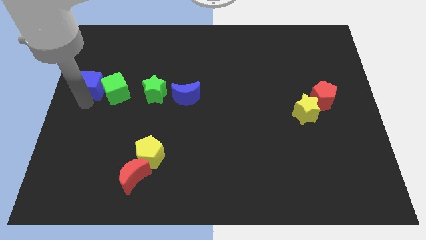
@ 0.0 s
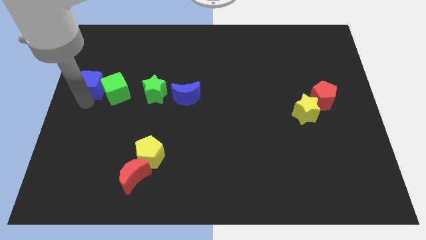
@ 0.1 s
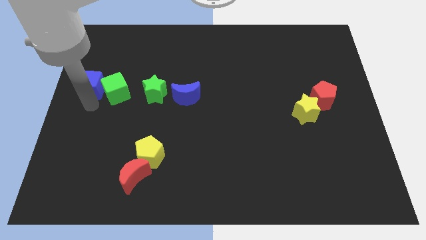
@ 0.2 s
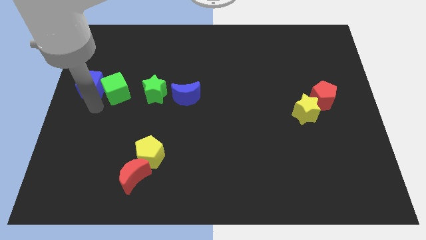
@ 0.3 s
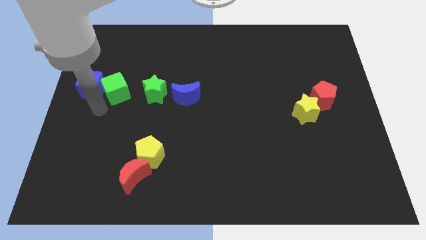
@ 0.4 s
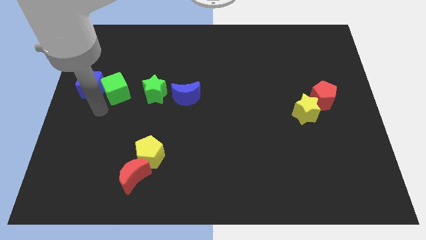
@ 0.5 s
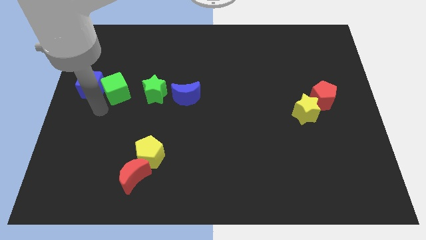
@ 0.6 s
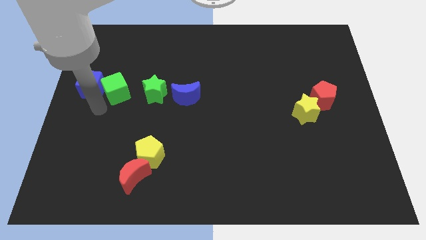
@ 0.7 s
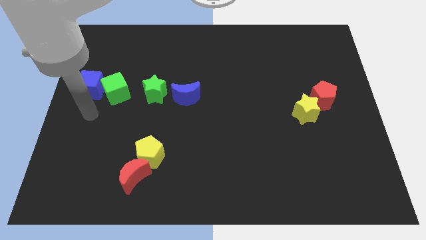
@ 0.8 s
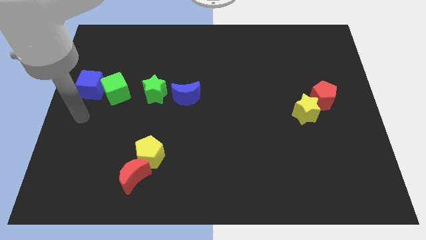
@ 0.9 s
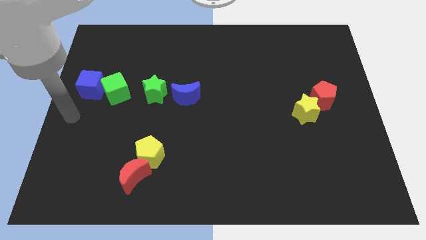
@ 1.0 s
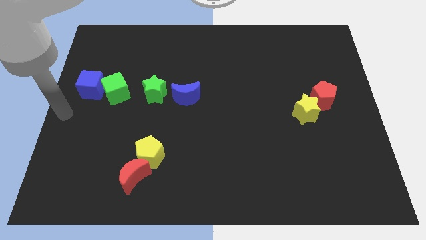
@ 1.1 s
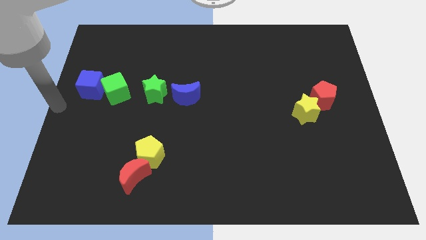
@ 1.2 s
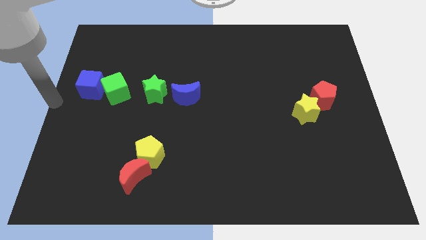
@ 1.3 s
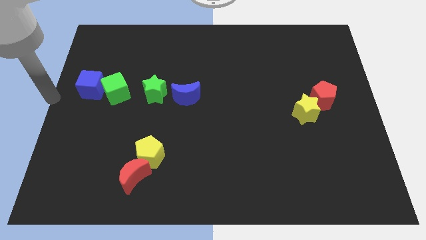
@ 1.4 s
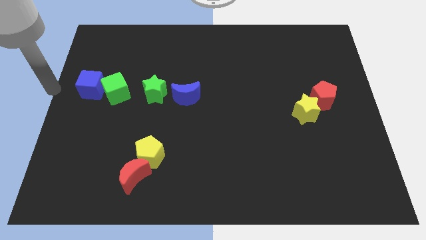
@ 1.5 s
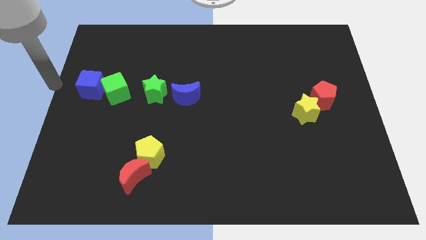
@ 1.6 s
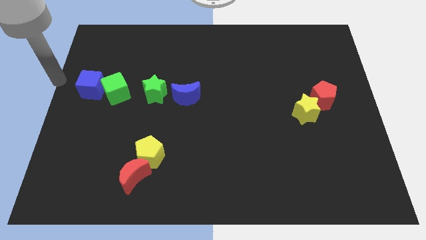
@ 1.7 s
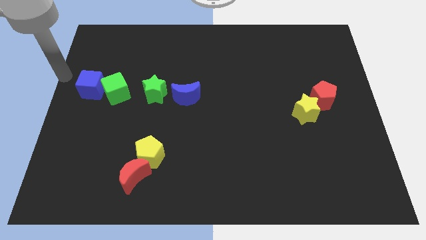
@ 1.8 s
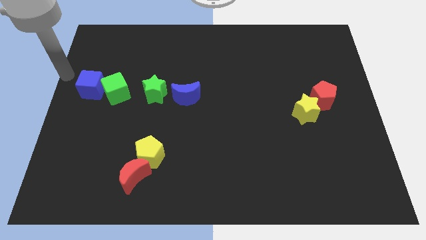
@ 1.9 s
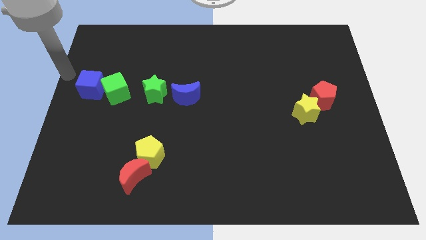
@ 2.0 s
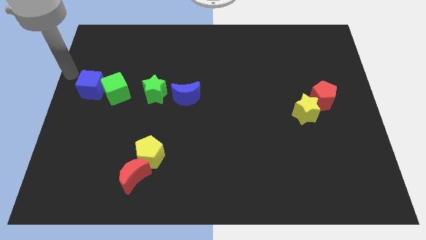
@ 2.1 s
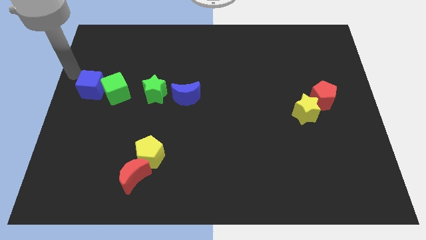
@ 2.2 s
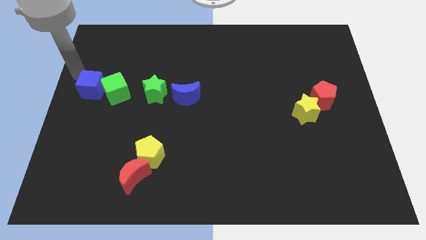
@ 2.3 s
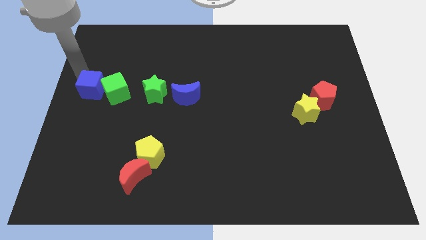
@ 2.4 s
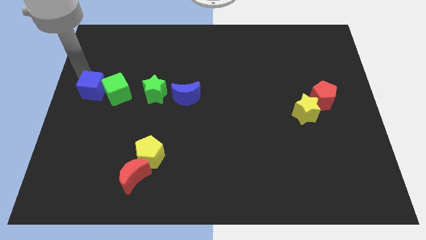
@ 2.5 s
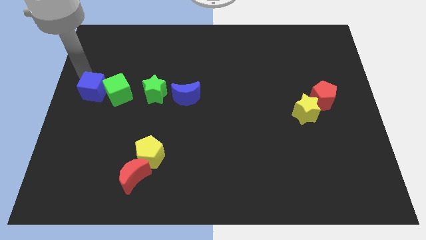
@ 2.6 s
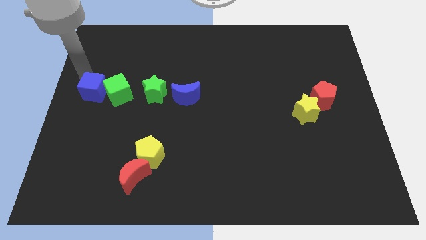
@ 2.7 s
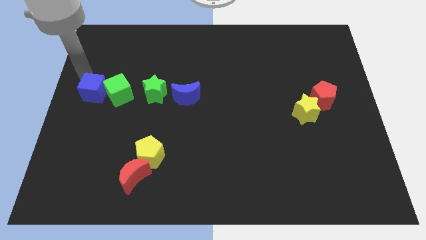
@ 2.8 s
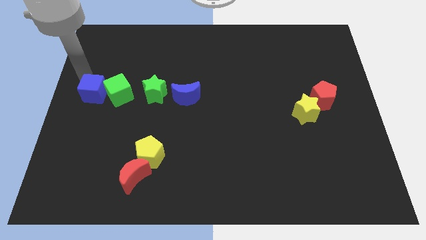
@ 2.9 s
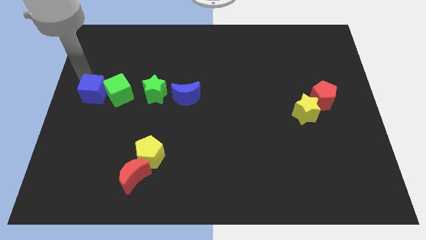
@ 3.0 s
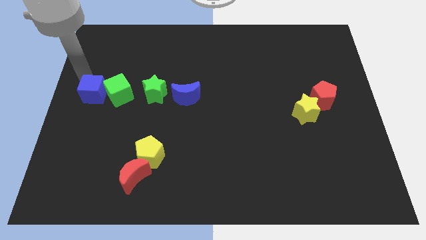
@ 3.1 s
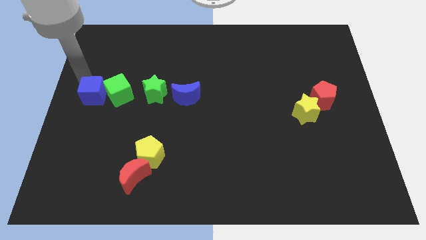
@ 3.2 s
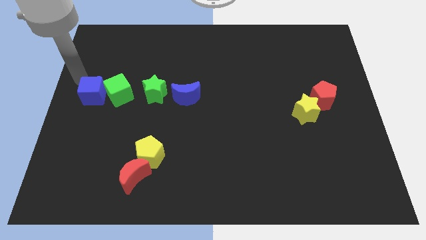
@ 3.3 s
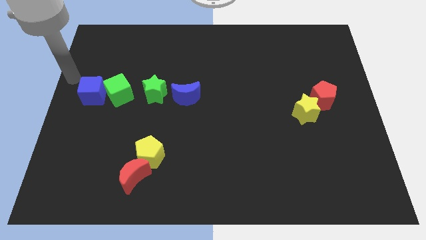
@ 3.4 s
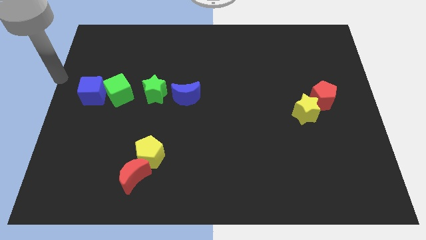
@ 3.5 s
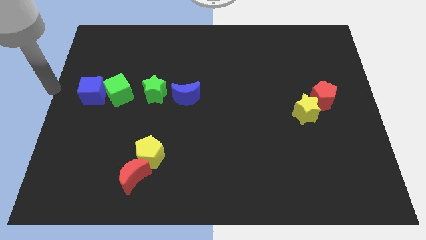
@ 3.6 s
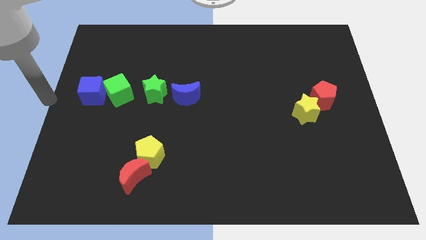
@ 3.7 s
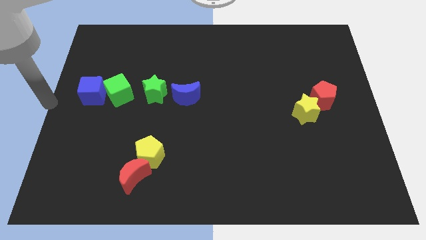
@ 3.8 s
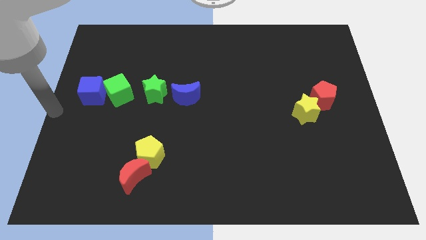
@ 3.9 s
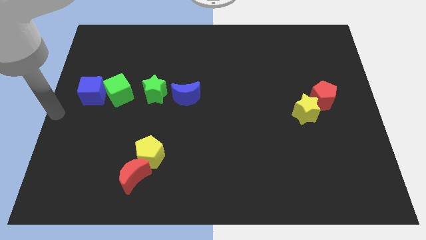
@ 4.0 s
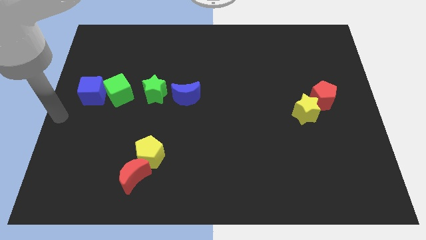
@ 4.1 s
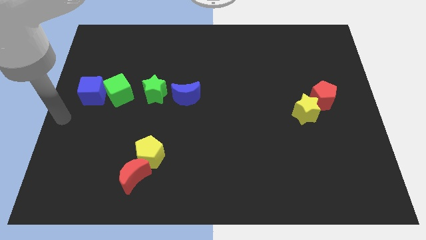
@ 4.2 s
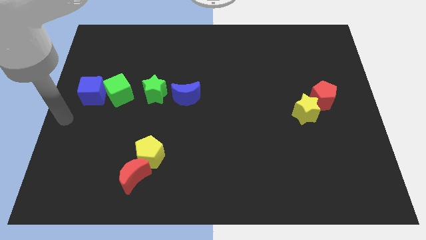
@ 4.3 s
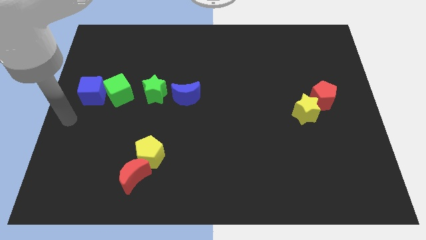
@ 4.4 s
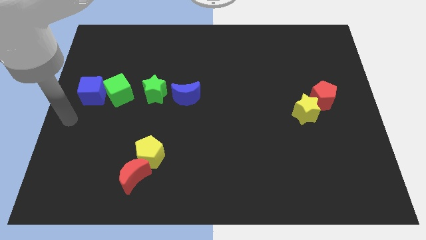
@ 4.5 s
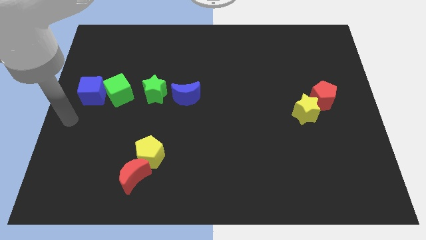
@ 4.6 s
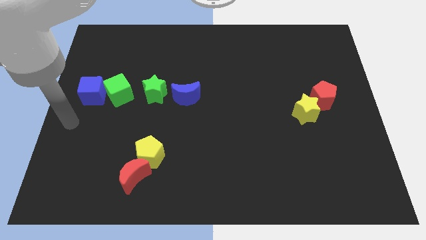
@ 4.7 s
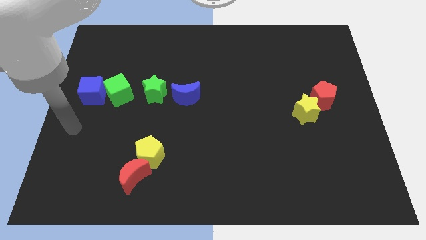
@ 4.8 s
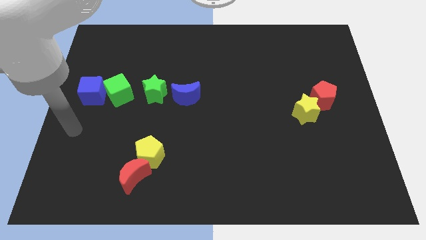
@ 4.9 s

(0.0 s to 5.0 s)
adjust the blue and green cubes to form a horizontal line

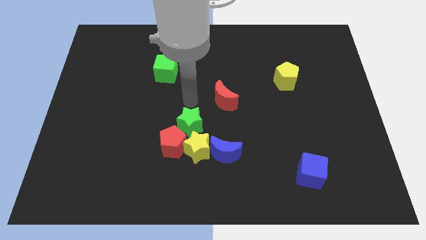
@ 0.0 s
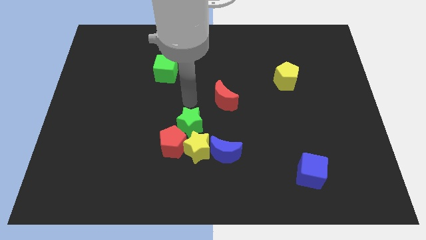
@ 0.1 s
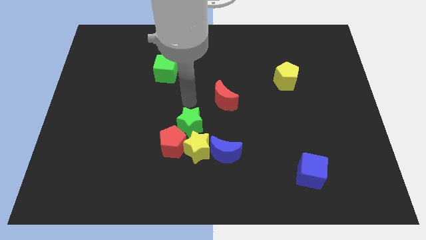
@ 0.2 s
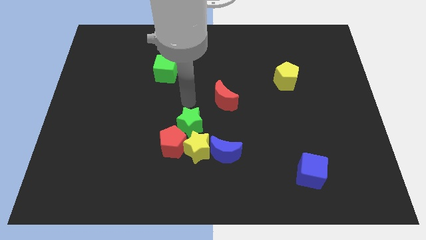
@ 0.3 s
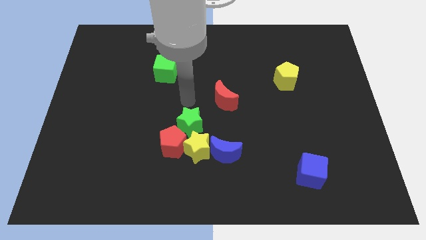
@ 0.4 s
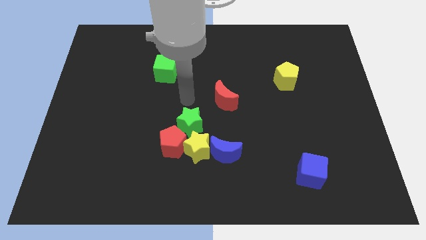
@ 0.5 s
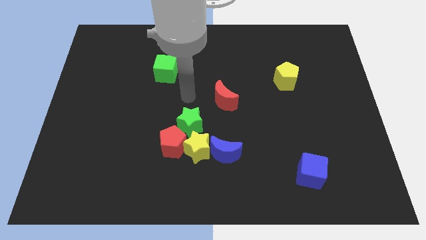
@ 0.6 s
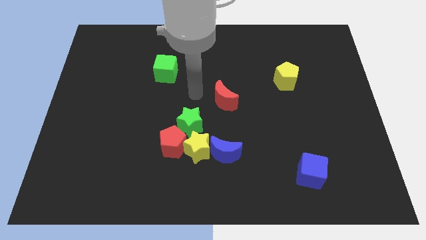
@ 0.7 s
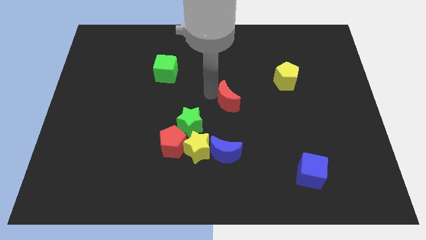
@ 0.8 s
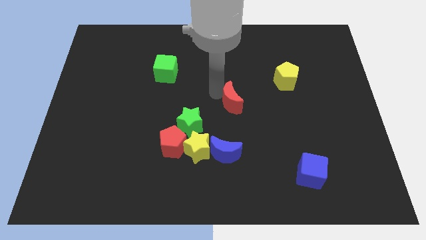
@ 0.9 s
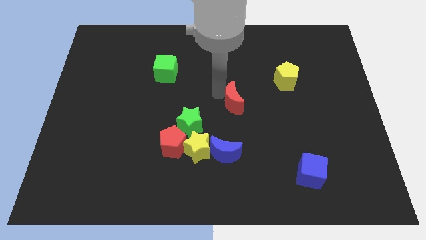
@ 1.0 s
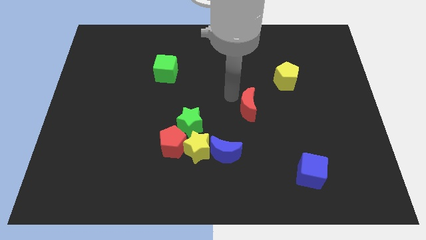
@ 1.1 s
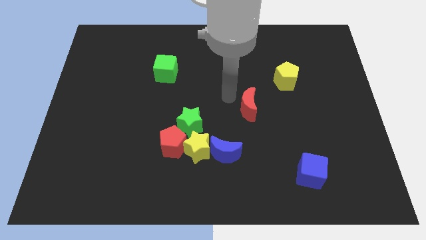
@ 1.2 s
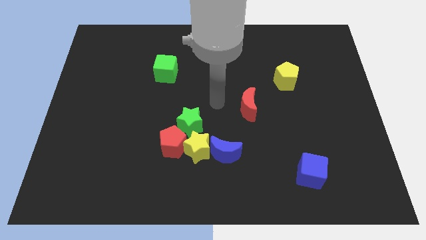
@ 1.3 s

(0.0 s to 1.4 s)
place the red crescent diagonally at the bottom left of the yellow pentagon

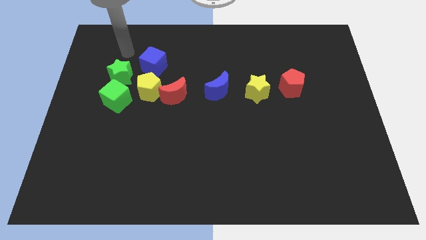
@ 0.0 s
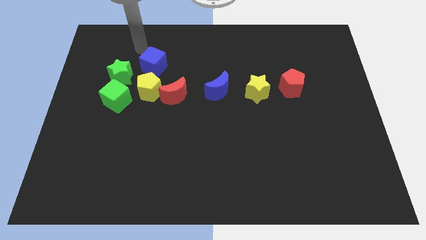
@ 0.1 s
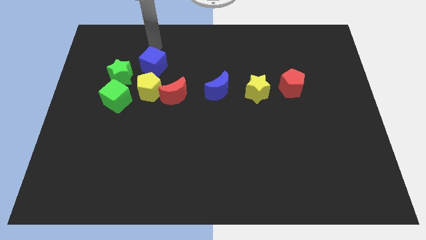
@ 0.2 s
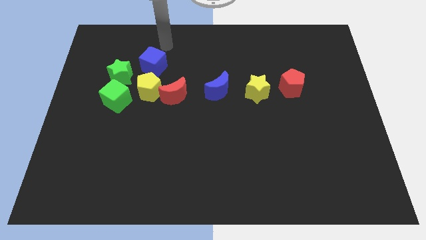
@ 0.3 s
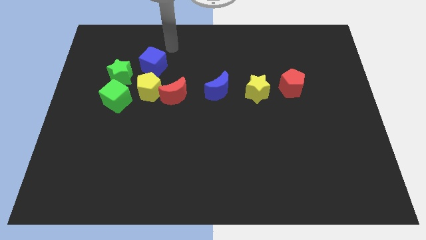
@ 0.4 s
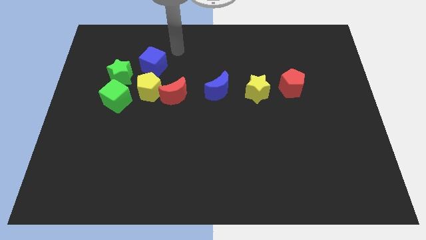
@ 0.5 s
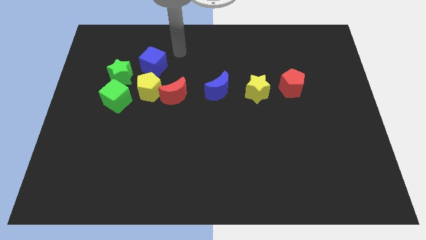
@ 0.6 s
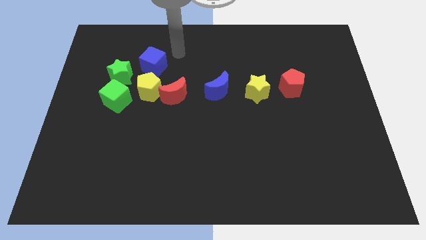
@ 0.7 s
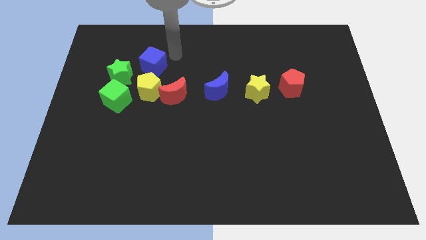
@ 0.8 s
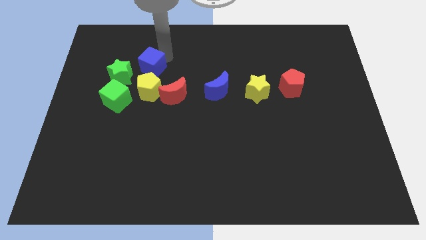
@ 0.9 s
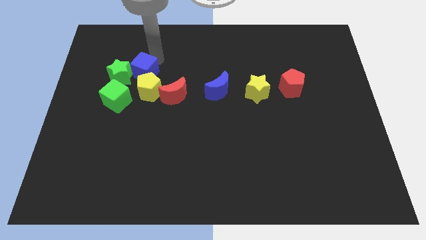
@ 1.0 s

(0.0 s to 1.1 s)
slide the blue cube into the green star

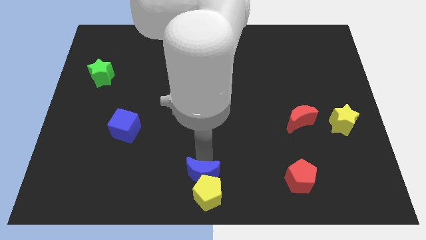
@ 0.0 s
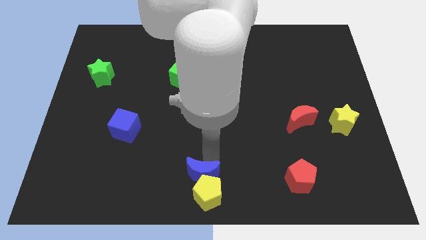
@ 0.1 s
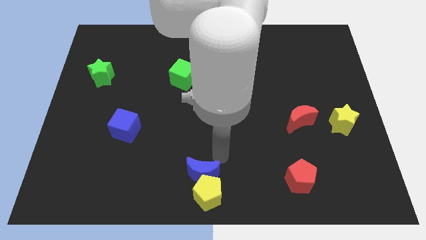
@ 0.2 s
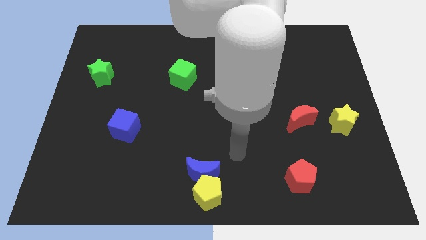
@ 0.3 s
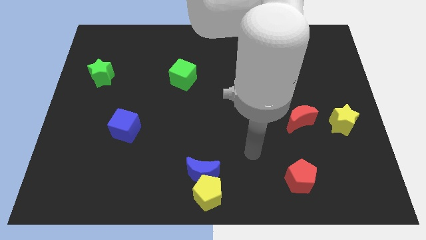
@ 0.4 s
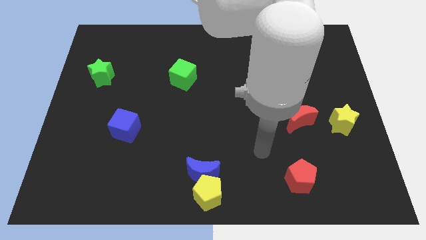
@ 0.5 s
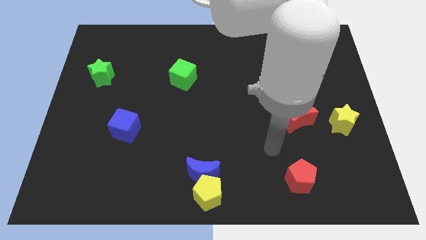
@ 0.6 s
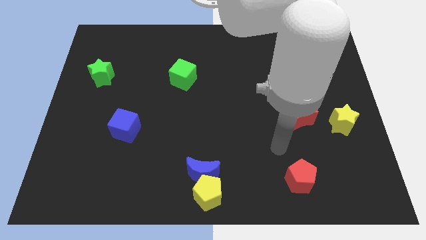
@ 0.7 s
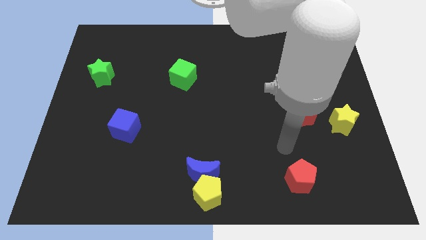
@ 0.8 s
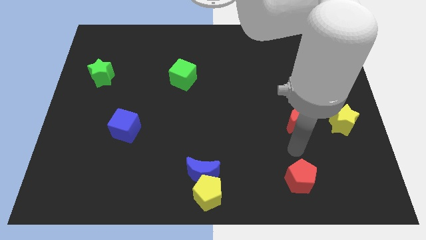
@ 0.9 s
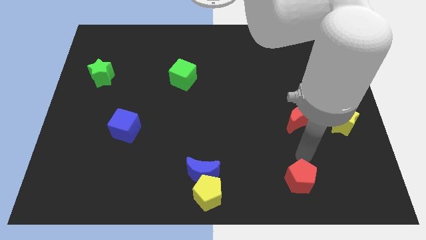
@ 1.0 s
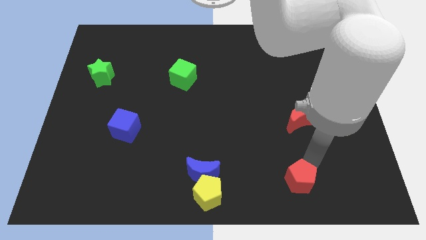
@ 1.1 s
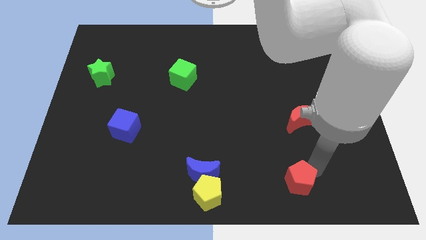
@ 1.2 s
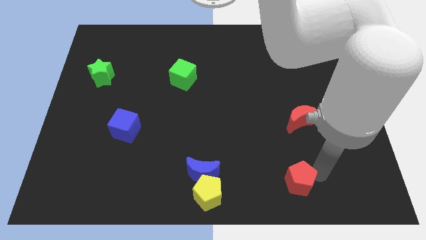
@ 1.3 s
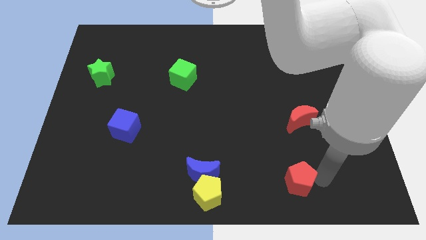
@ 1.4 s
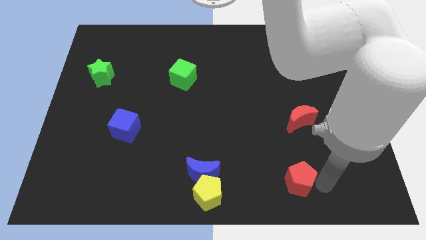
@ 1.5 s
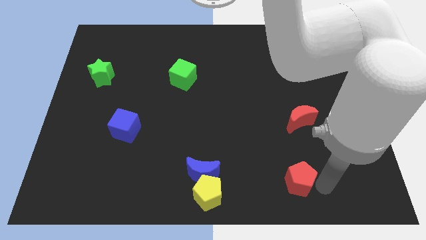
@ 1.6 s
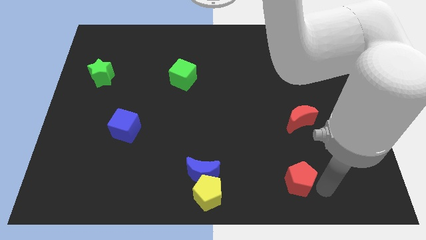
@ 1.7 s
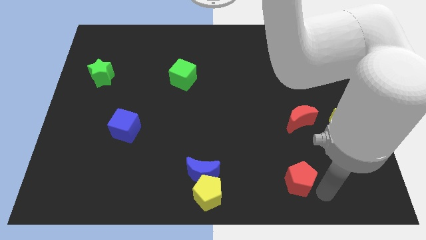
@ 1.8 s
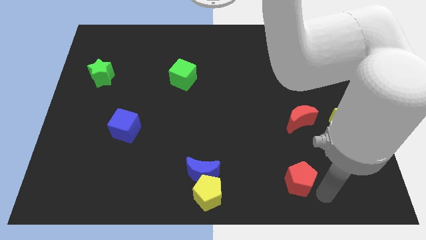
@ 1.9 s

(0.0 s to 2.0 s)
move your arm to bottom the red pentagon
